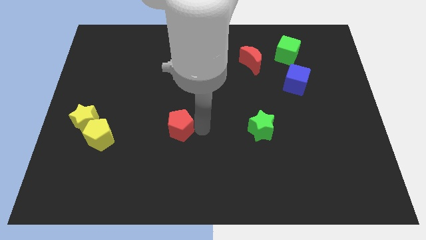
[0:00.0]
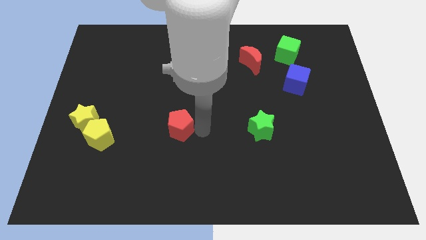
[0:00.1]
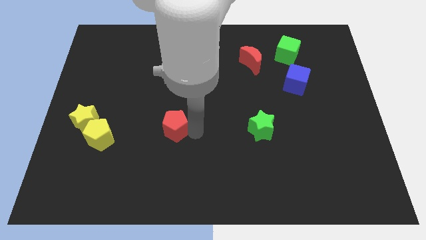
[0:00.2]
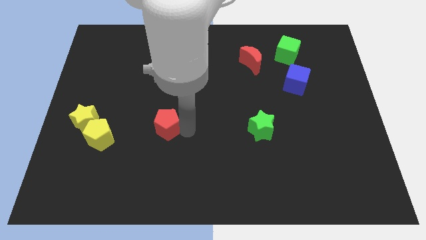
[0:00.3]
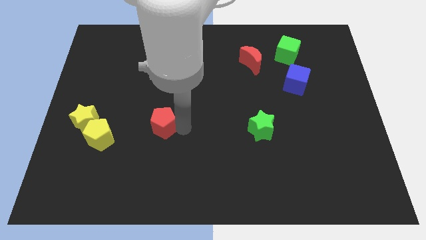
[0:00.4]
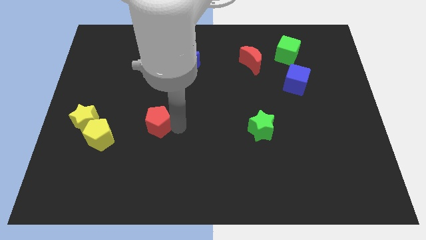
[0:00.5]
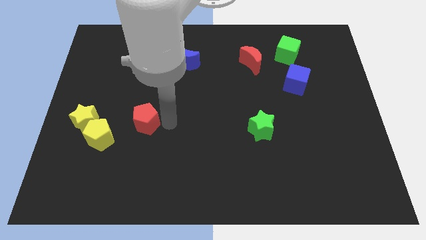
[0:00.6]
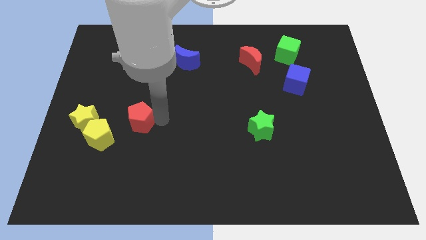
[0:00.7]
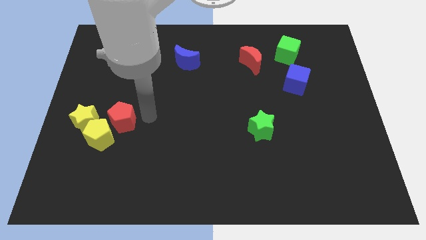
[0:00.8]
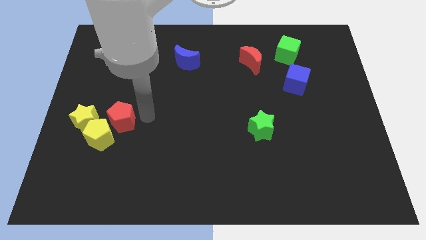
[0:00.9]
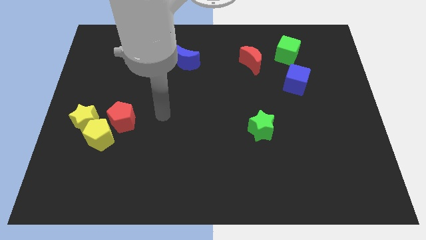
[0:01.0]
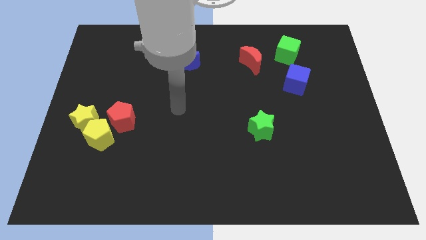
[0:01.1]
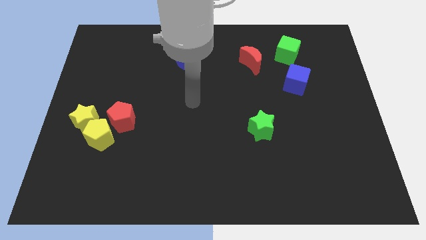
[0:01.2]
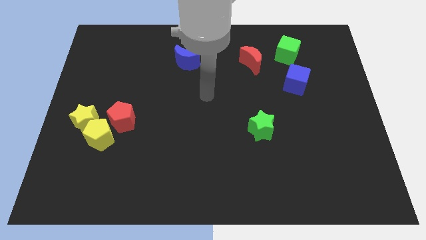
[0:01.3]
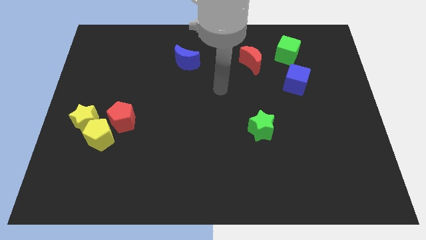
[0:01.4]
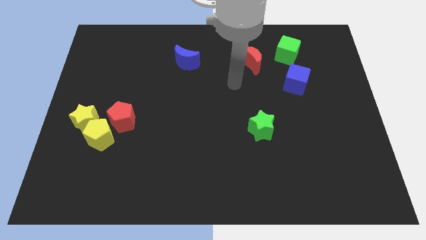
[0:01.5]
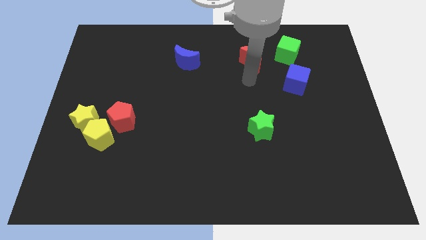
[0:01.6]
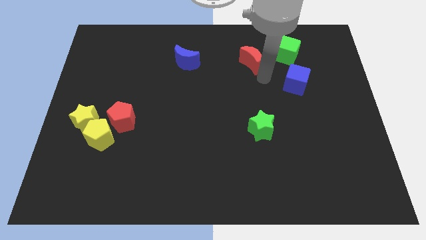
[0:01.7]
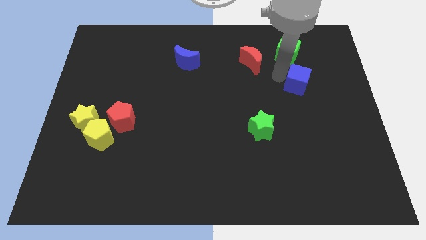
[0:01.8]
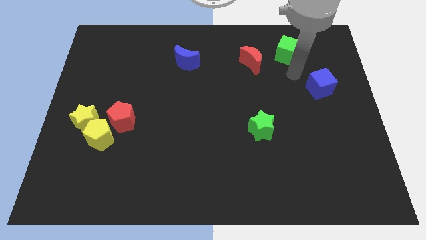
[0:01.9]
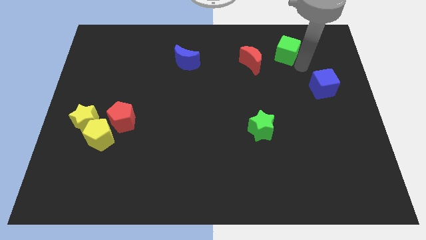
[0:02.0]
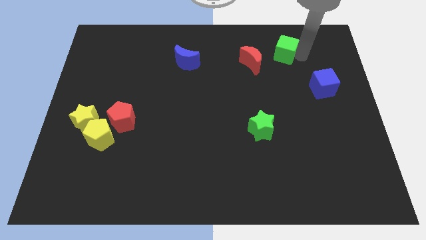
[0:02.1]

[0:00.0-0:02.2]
push the red pentagon close to yellow blocks

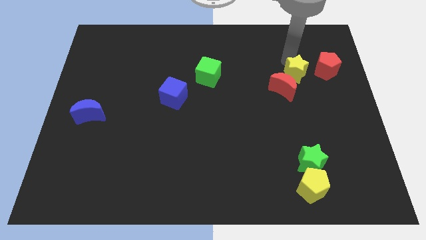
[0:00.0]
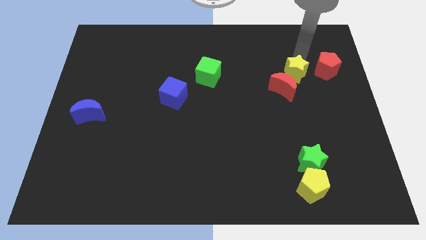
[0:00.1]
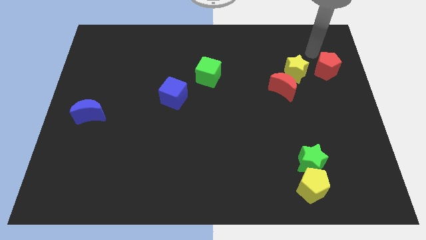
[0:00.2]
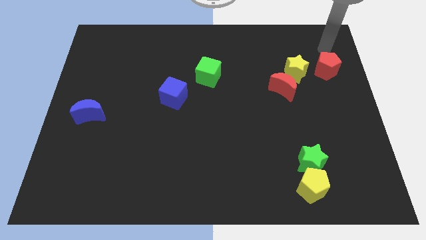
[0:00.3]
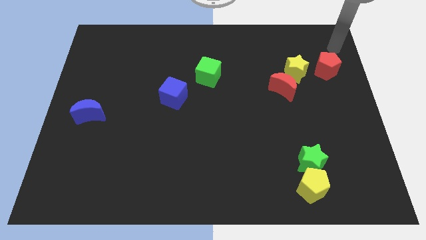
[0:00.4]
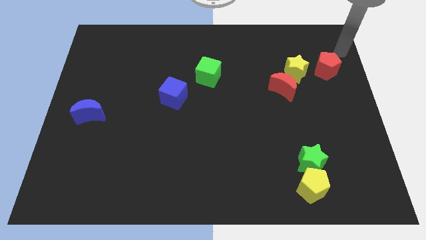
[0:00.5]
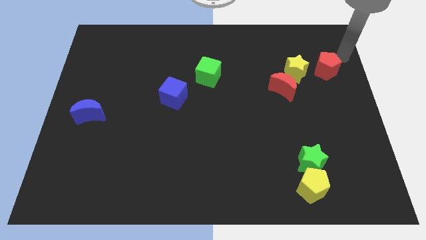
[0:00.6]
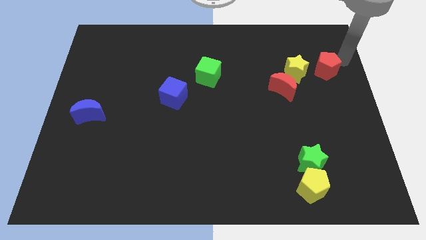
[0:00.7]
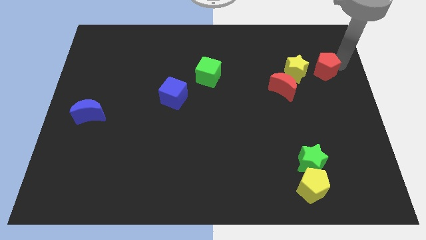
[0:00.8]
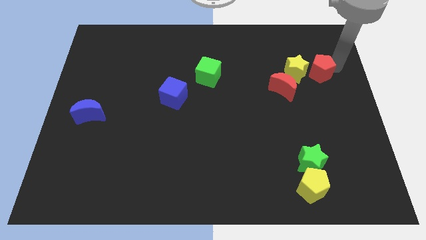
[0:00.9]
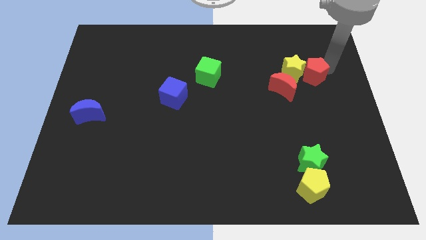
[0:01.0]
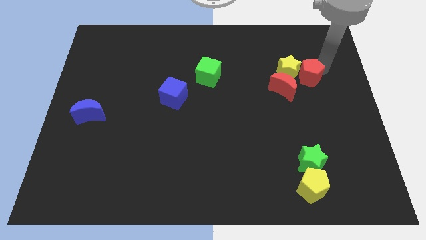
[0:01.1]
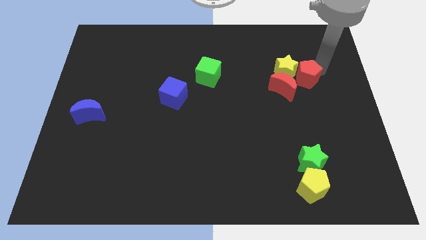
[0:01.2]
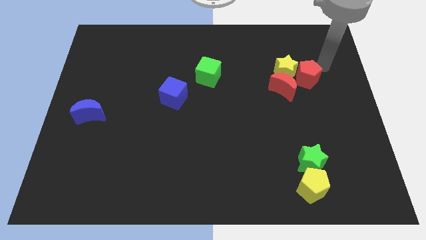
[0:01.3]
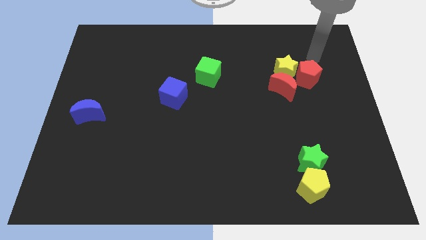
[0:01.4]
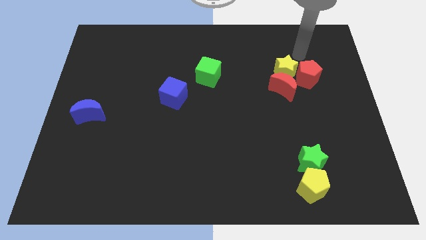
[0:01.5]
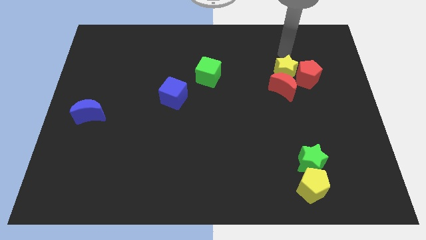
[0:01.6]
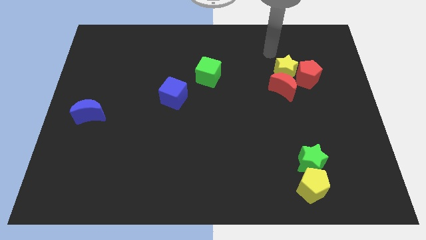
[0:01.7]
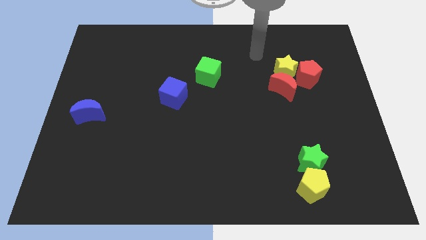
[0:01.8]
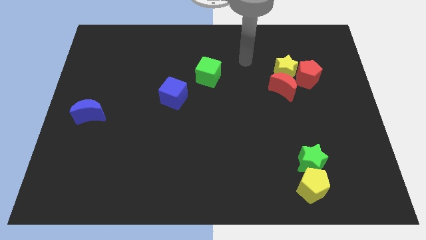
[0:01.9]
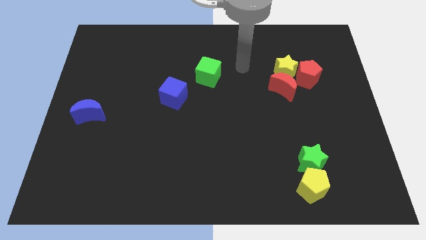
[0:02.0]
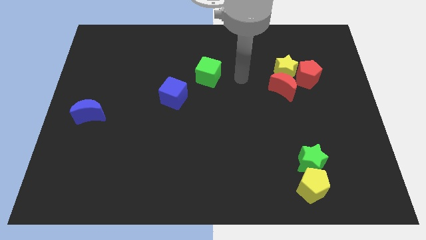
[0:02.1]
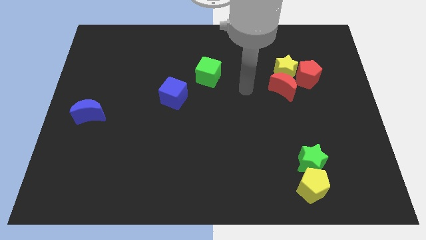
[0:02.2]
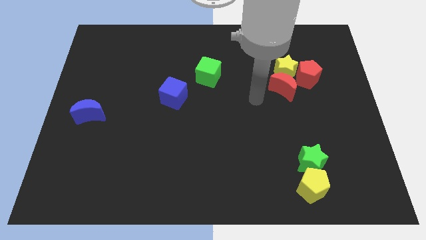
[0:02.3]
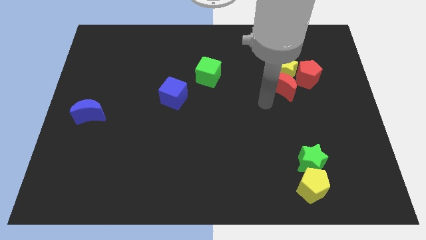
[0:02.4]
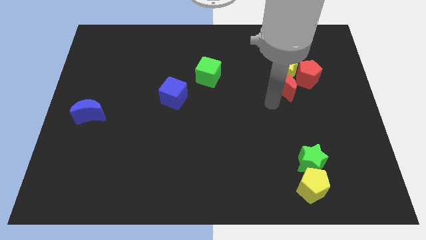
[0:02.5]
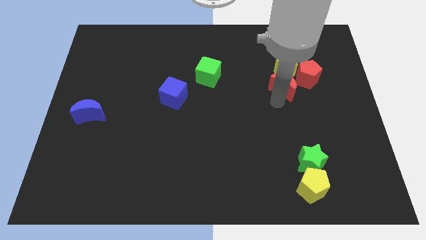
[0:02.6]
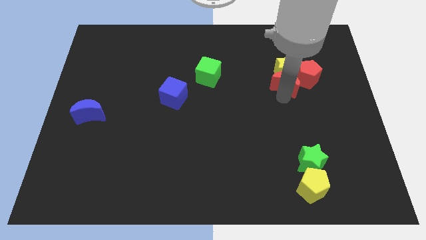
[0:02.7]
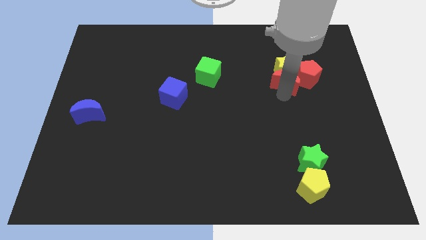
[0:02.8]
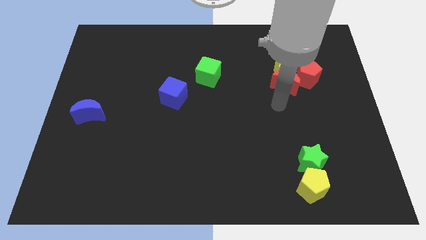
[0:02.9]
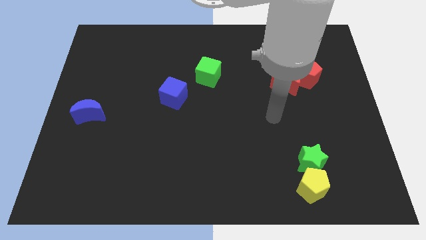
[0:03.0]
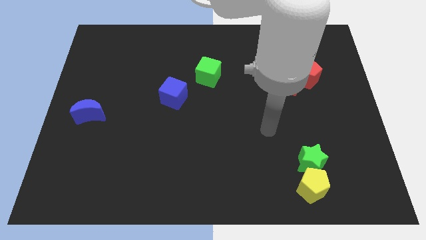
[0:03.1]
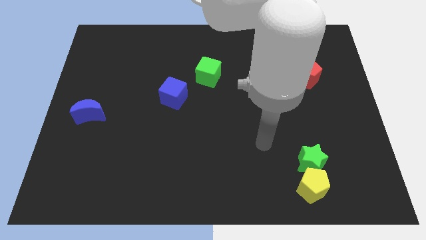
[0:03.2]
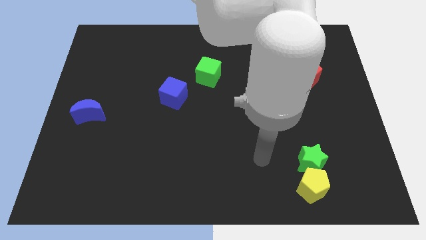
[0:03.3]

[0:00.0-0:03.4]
move the yellow star red pentagon and red crescent together

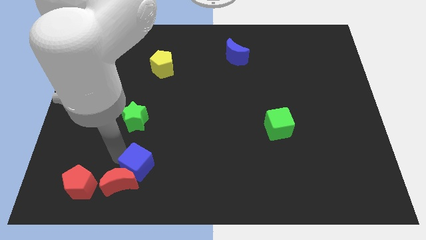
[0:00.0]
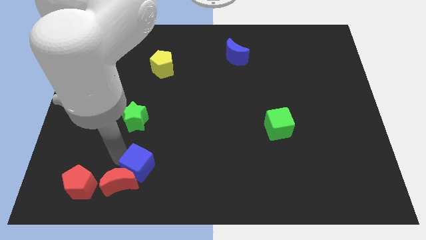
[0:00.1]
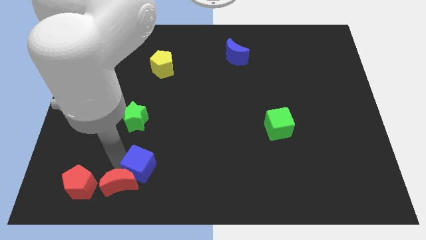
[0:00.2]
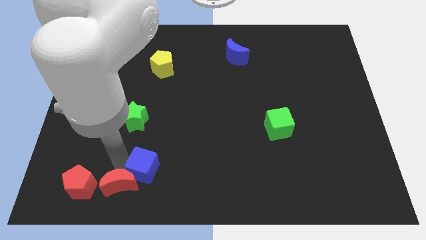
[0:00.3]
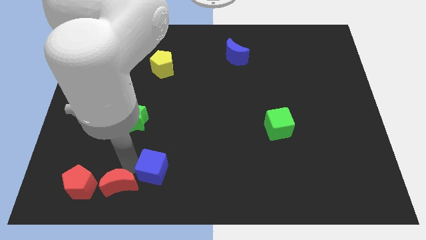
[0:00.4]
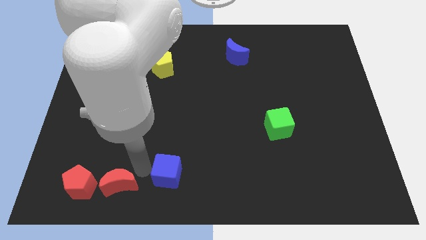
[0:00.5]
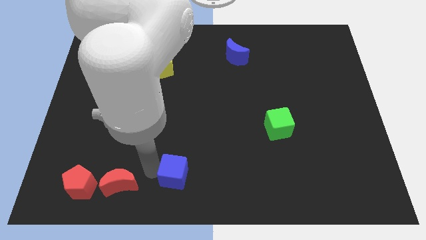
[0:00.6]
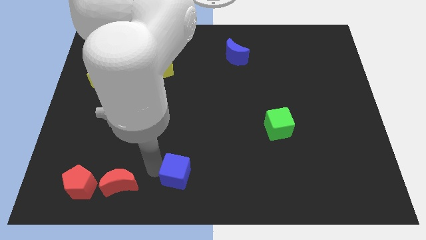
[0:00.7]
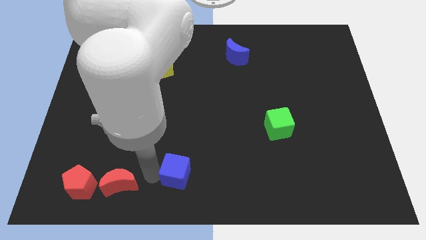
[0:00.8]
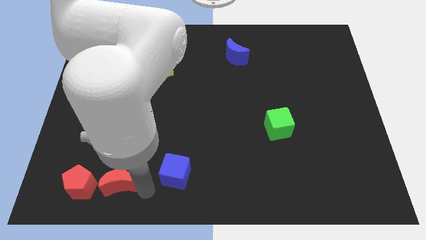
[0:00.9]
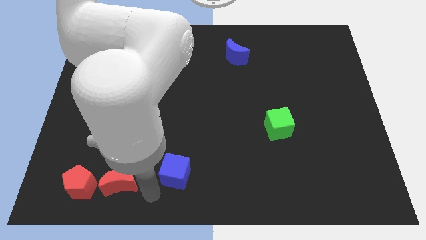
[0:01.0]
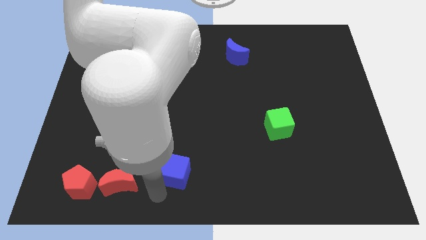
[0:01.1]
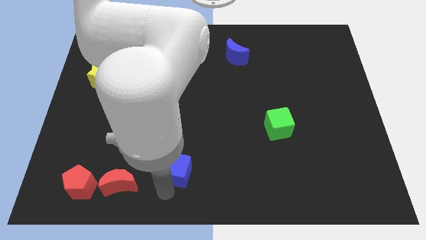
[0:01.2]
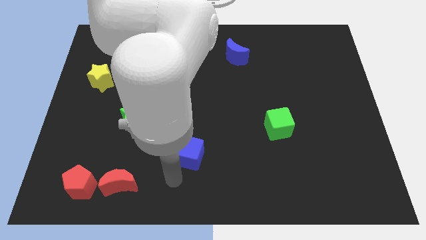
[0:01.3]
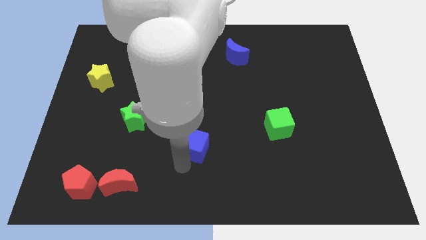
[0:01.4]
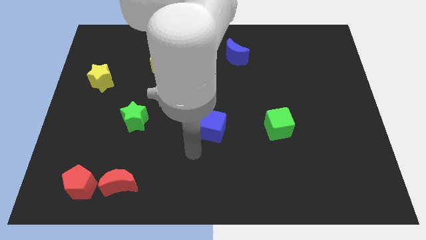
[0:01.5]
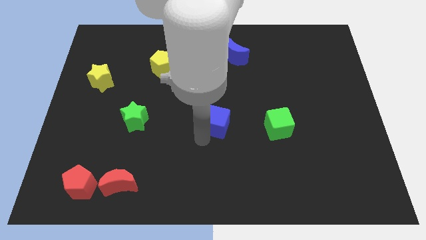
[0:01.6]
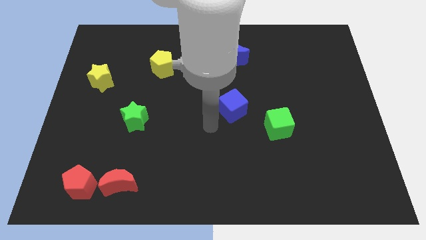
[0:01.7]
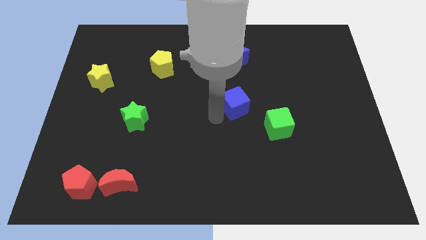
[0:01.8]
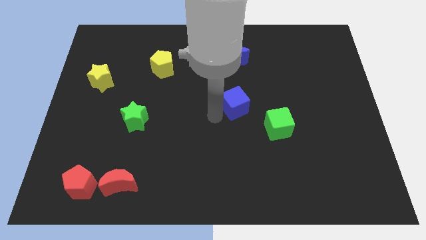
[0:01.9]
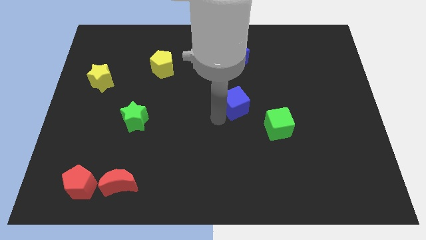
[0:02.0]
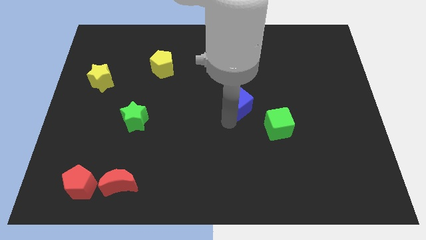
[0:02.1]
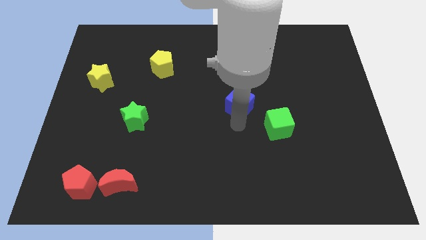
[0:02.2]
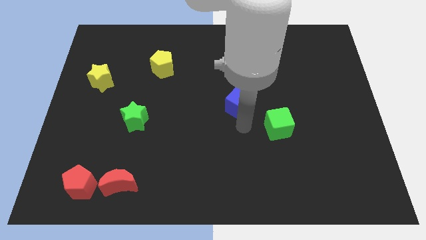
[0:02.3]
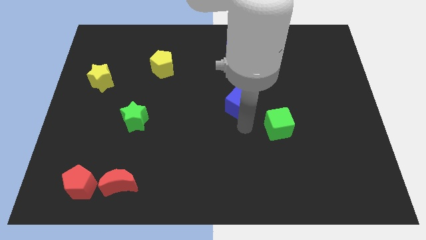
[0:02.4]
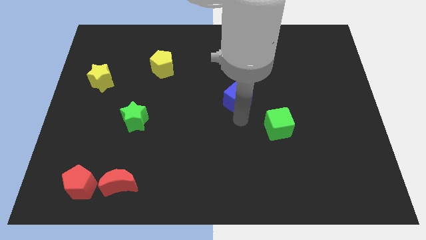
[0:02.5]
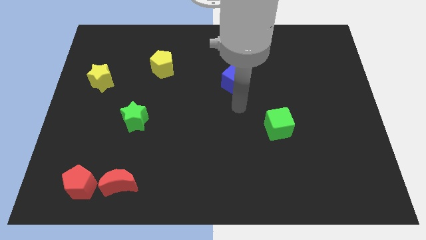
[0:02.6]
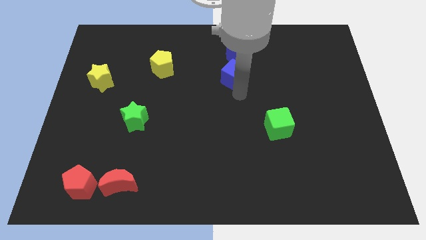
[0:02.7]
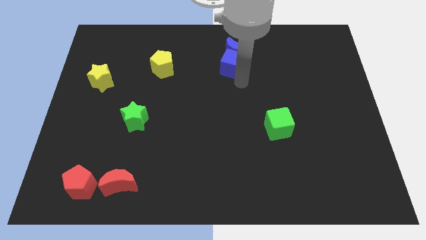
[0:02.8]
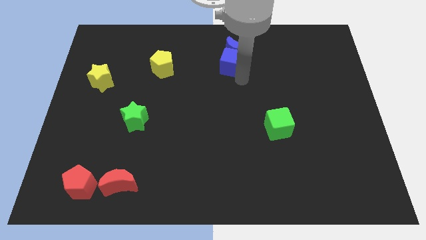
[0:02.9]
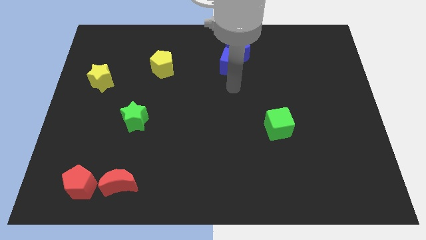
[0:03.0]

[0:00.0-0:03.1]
add blue cube into blue moon

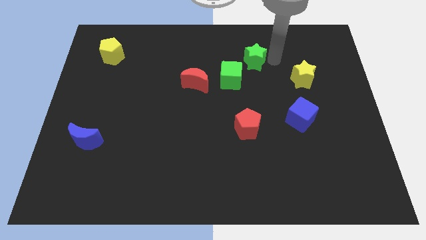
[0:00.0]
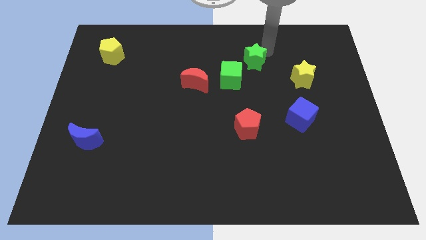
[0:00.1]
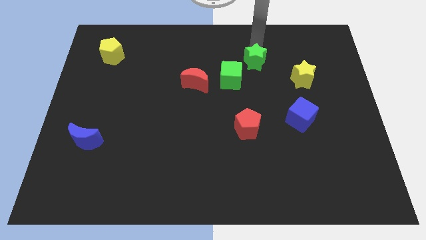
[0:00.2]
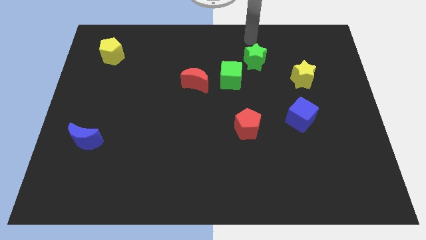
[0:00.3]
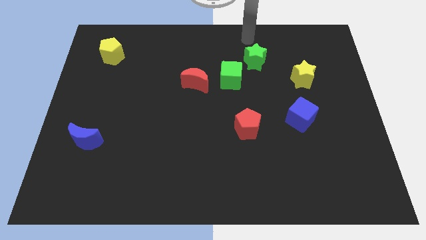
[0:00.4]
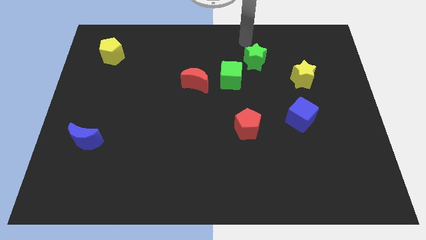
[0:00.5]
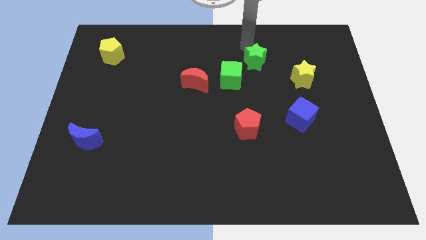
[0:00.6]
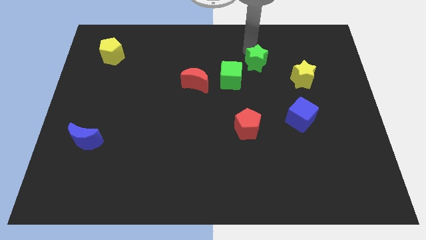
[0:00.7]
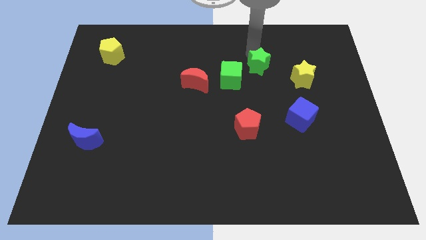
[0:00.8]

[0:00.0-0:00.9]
tap the green star on its top
